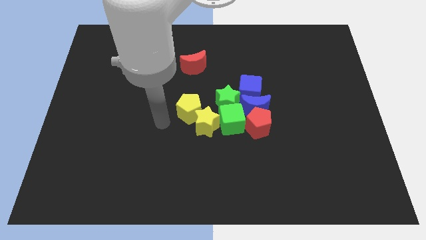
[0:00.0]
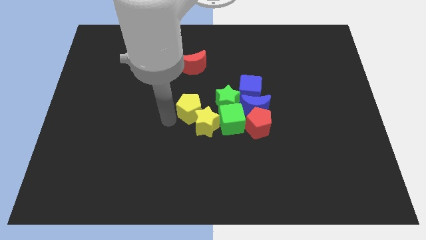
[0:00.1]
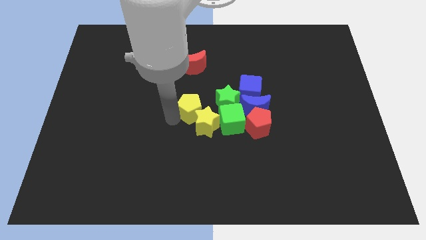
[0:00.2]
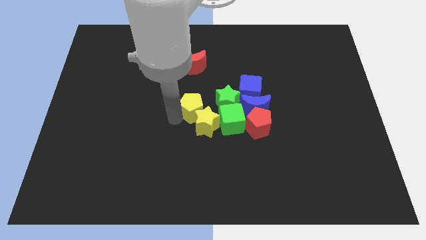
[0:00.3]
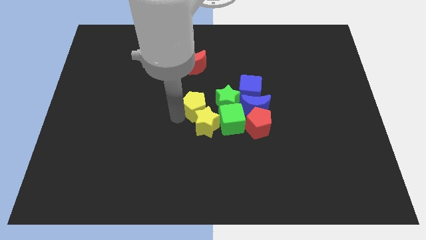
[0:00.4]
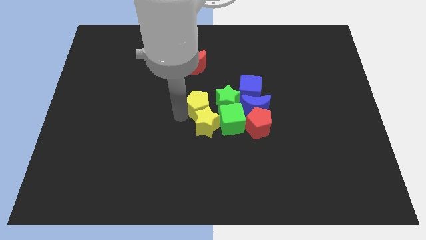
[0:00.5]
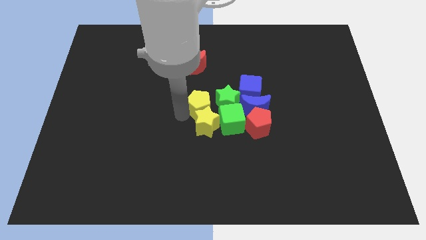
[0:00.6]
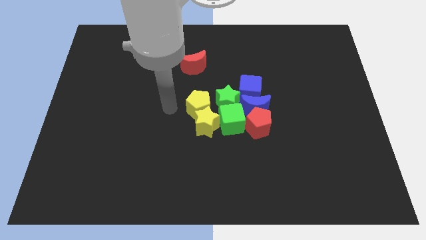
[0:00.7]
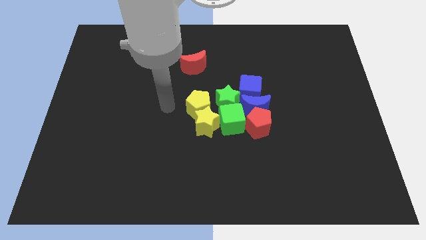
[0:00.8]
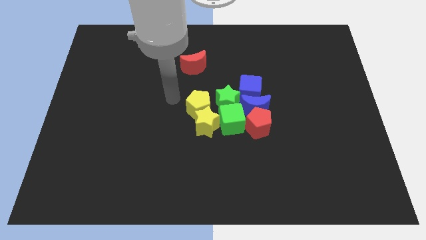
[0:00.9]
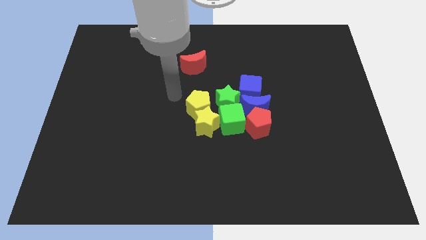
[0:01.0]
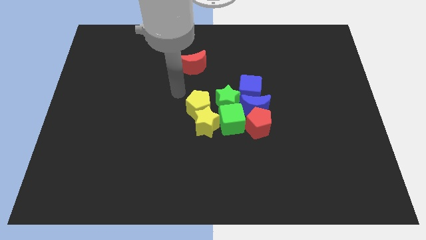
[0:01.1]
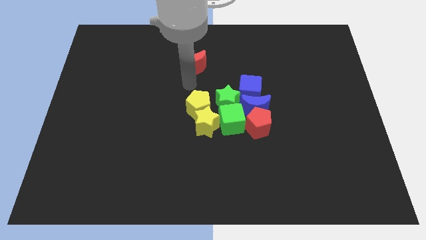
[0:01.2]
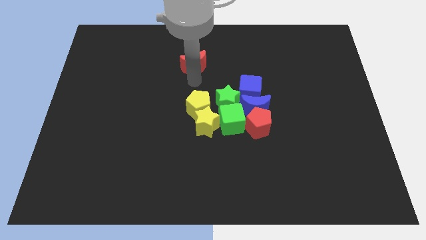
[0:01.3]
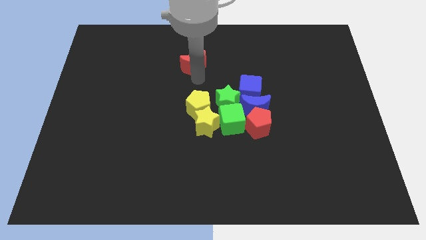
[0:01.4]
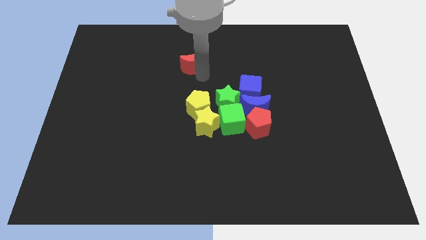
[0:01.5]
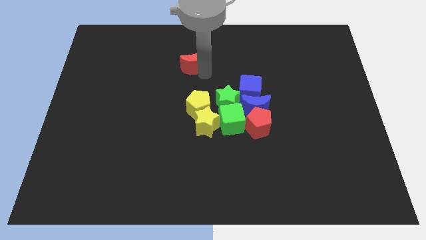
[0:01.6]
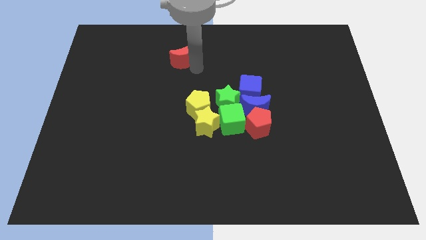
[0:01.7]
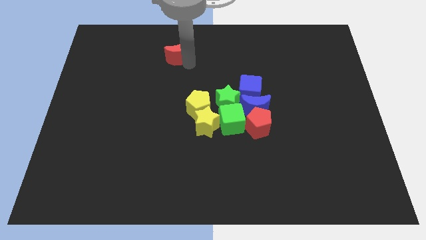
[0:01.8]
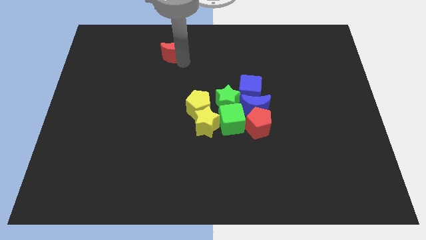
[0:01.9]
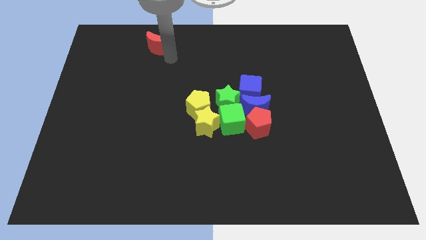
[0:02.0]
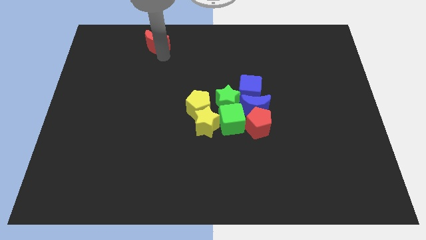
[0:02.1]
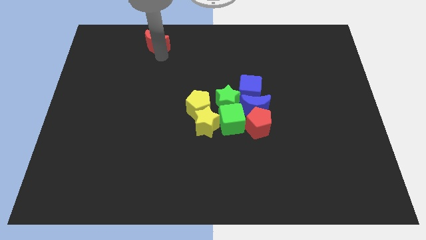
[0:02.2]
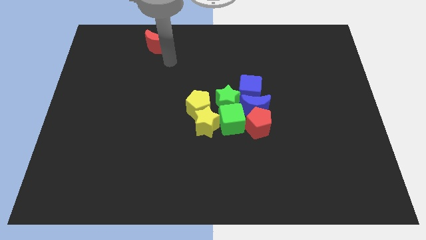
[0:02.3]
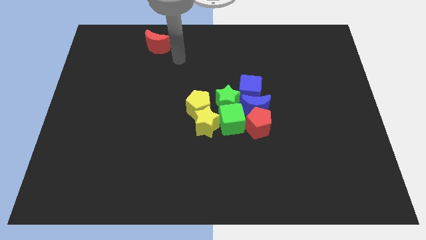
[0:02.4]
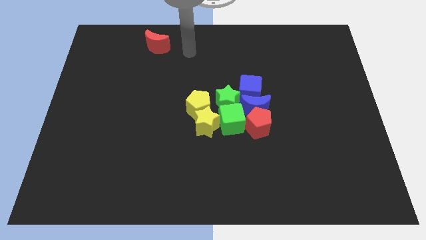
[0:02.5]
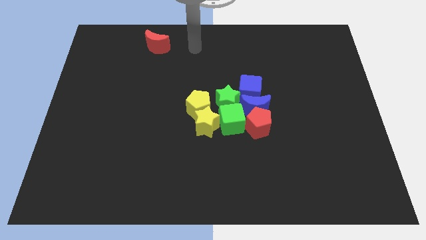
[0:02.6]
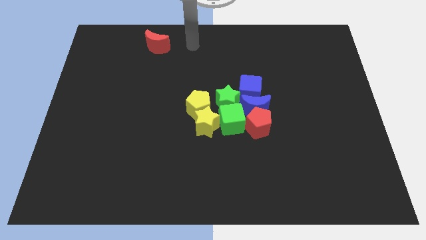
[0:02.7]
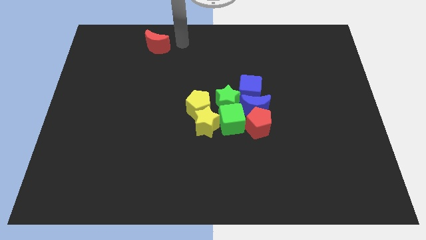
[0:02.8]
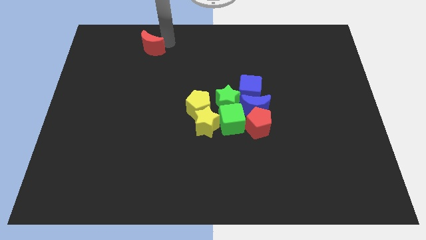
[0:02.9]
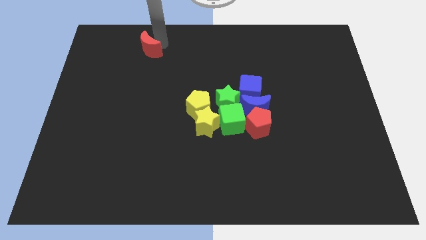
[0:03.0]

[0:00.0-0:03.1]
move the red moon to the top of the board

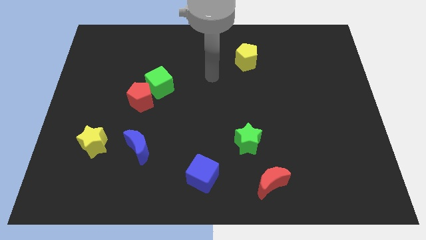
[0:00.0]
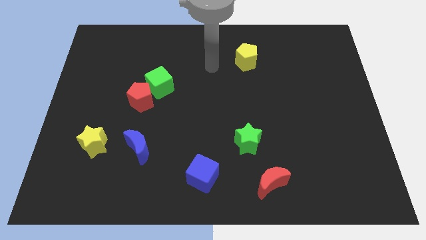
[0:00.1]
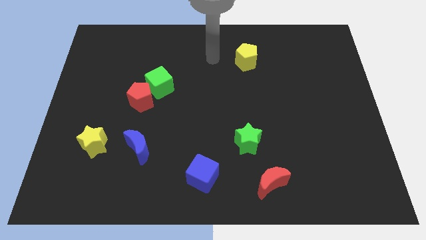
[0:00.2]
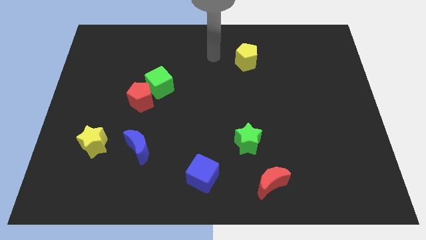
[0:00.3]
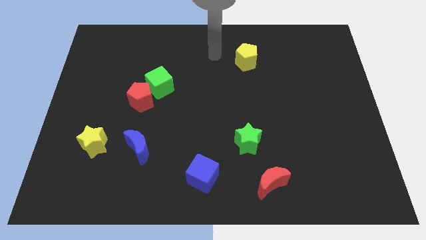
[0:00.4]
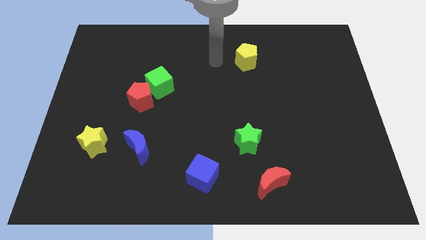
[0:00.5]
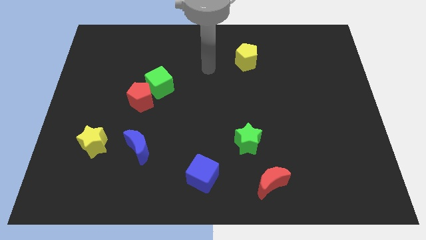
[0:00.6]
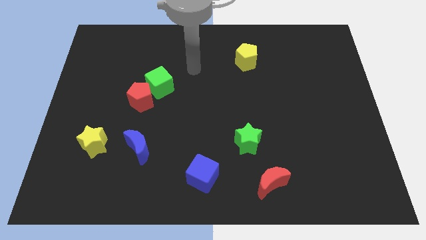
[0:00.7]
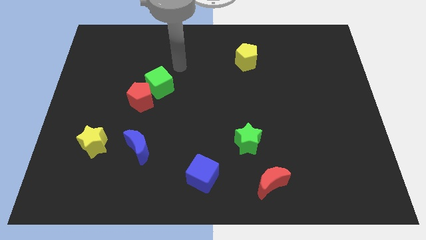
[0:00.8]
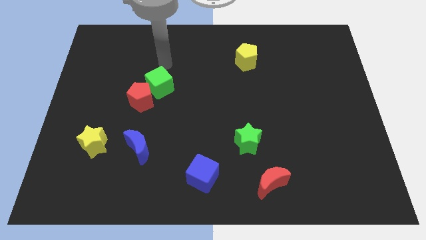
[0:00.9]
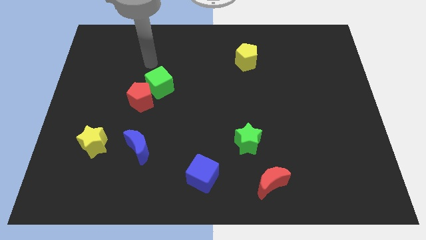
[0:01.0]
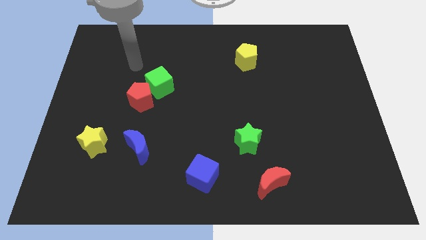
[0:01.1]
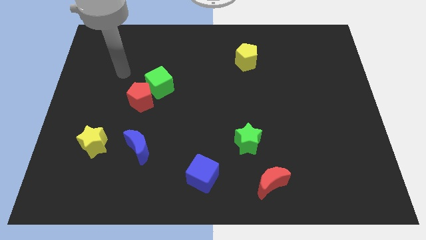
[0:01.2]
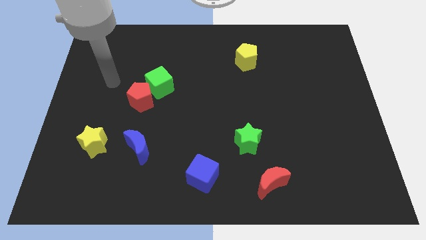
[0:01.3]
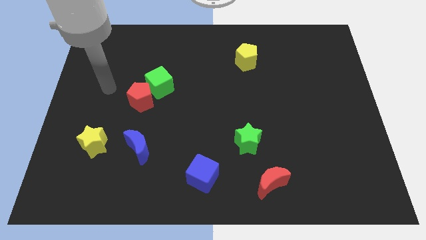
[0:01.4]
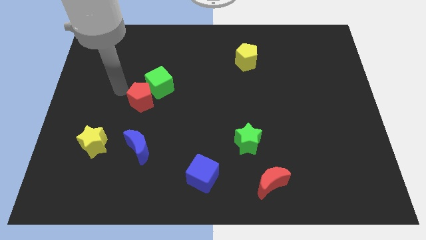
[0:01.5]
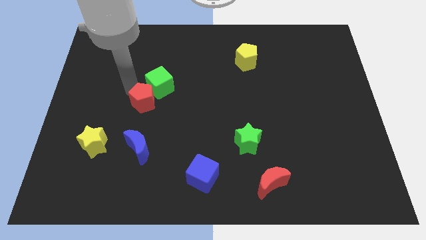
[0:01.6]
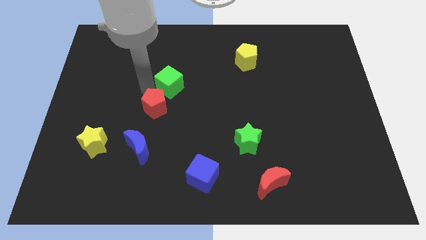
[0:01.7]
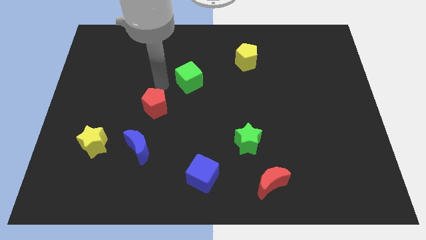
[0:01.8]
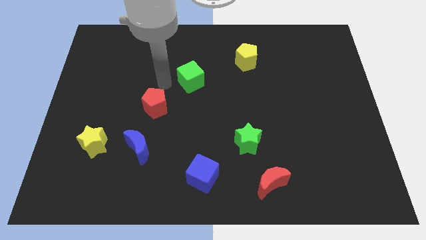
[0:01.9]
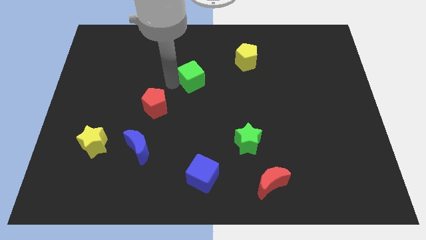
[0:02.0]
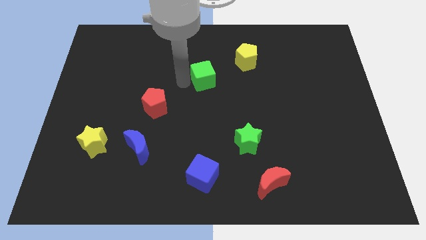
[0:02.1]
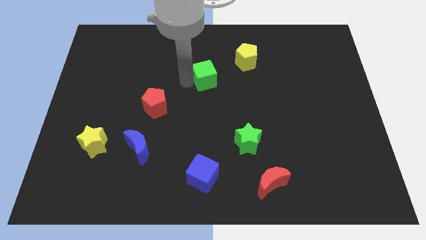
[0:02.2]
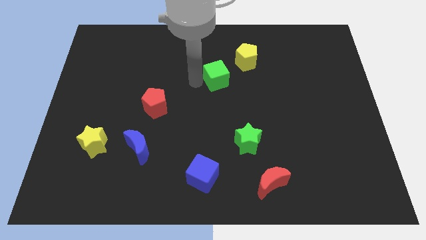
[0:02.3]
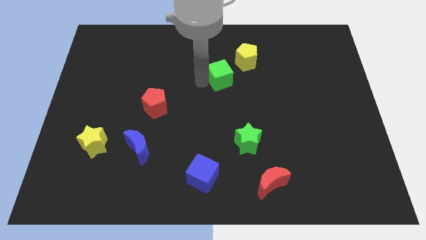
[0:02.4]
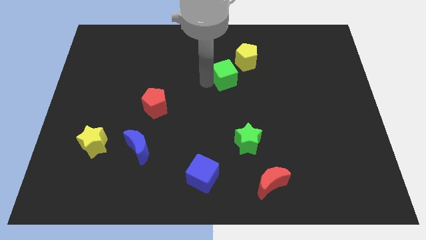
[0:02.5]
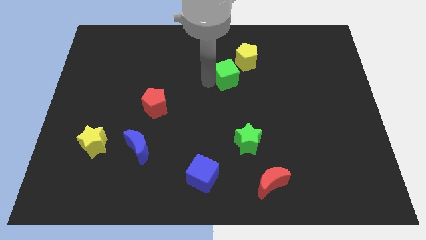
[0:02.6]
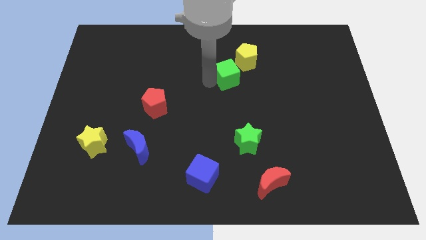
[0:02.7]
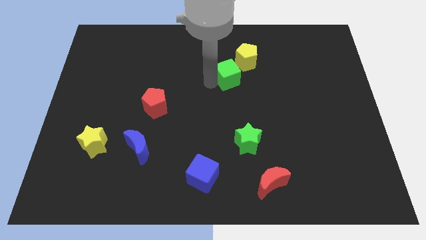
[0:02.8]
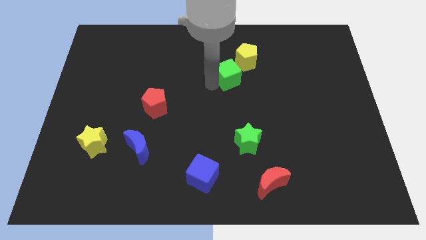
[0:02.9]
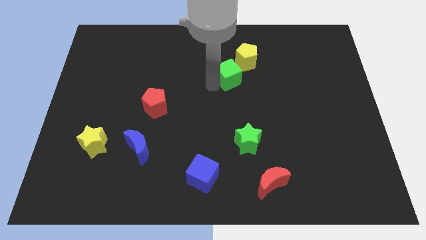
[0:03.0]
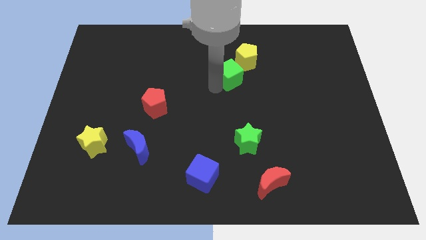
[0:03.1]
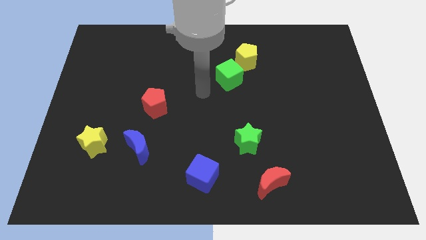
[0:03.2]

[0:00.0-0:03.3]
place the green cube above the green star

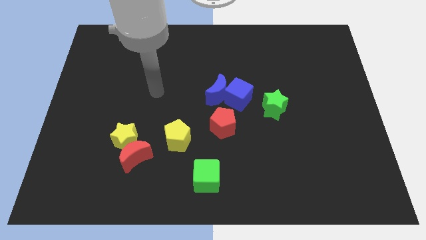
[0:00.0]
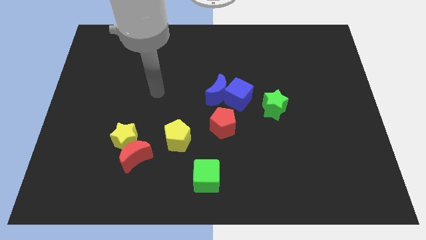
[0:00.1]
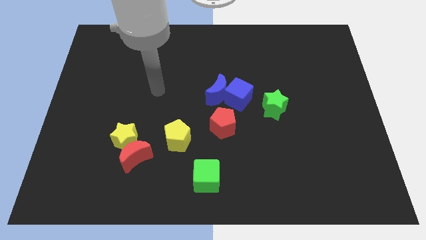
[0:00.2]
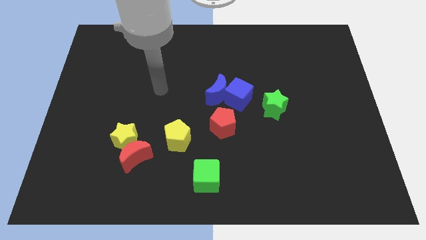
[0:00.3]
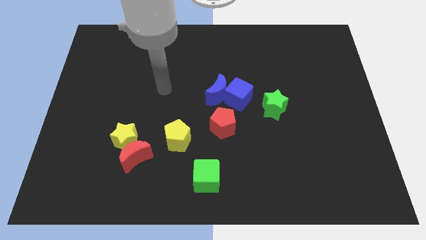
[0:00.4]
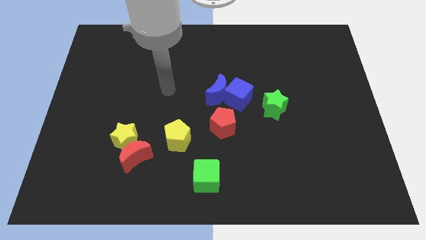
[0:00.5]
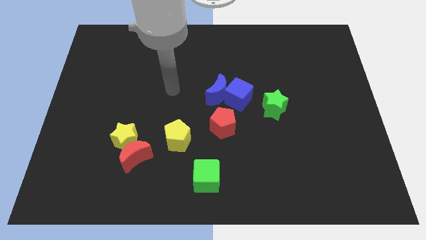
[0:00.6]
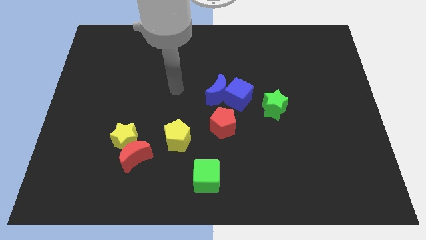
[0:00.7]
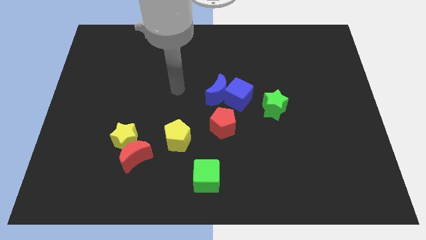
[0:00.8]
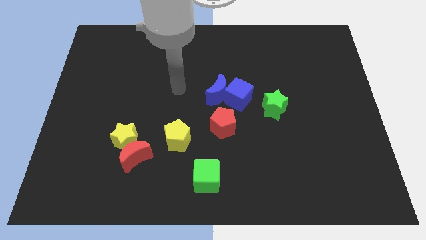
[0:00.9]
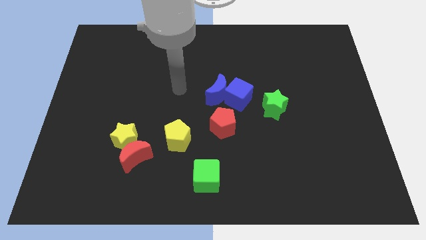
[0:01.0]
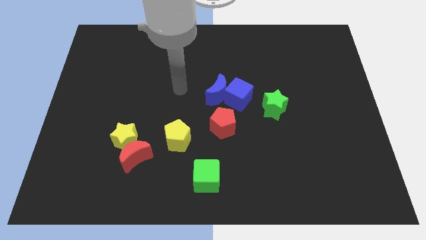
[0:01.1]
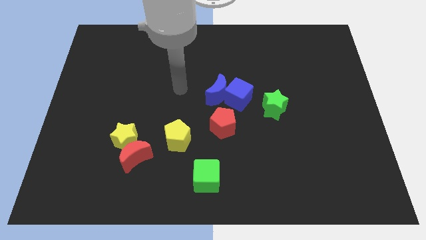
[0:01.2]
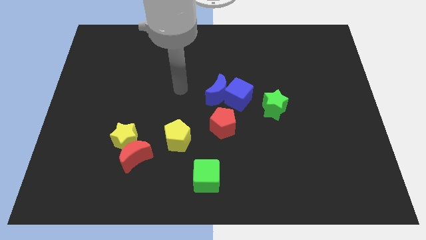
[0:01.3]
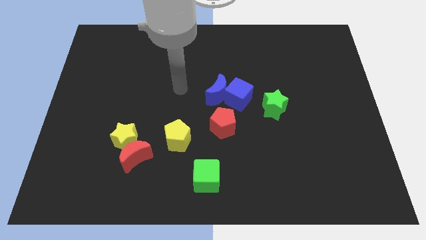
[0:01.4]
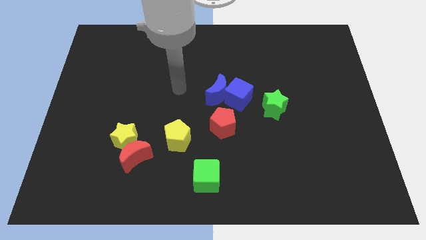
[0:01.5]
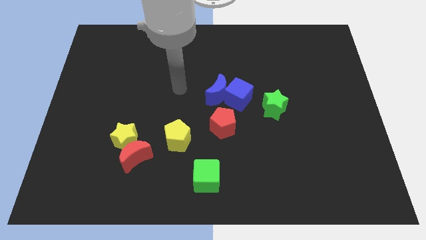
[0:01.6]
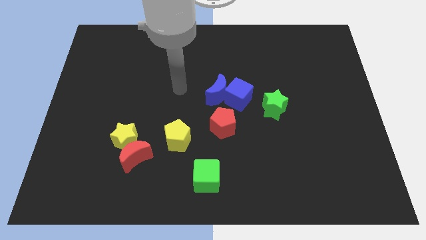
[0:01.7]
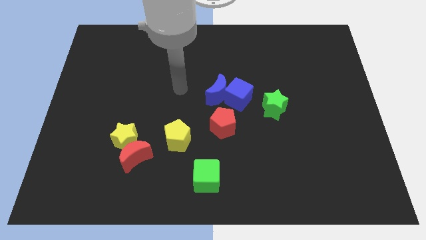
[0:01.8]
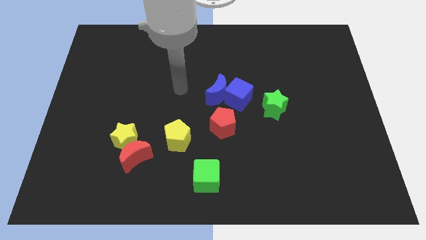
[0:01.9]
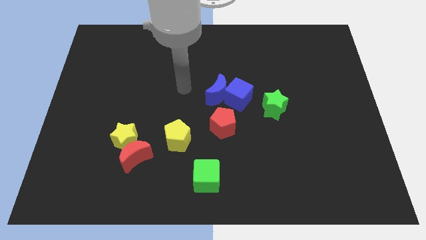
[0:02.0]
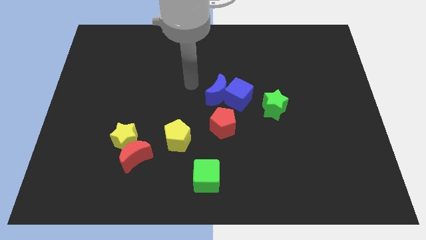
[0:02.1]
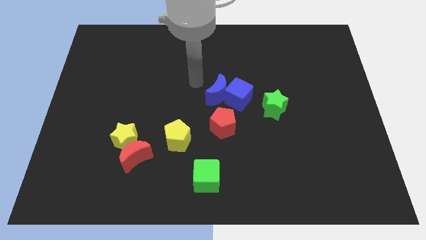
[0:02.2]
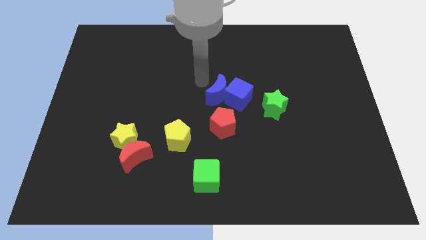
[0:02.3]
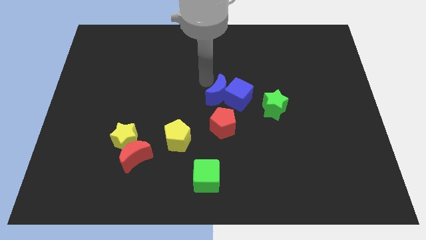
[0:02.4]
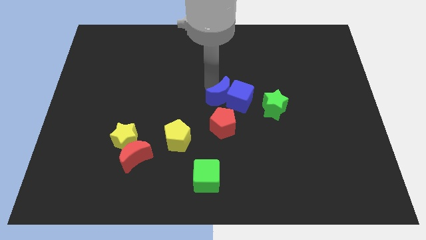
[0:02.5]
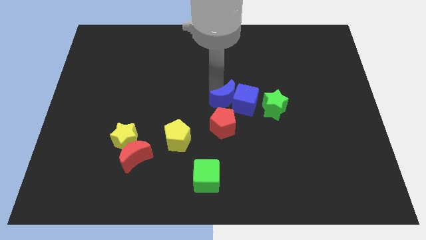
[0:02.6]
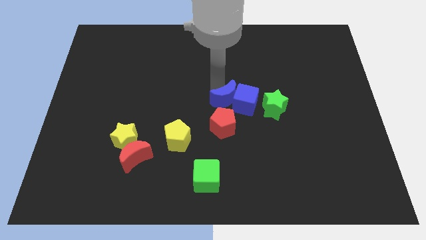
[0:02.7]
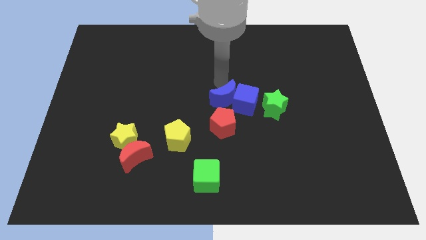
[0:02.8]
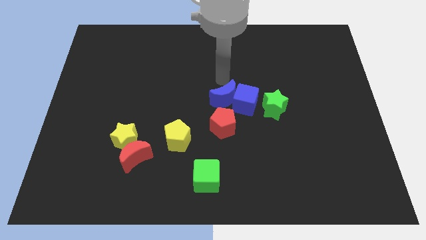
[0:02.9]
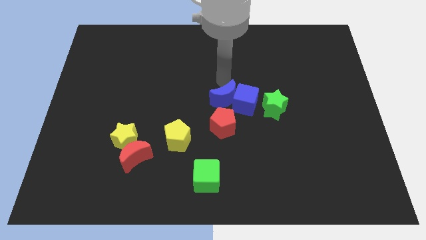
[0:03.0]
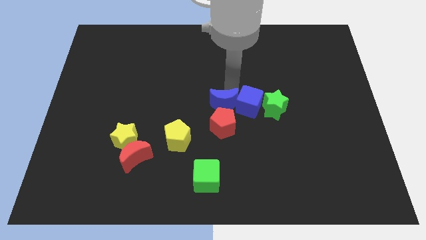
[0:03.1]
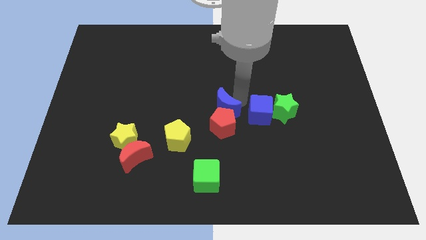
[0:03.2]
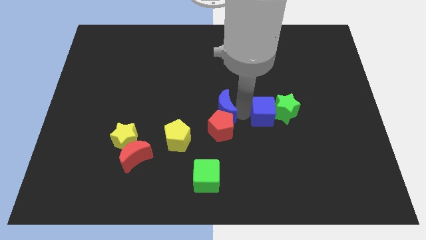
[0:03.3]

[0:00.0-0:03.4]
place blue moon close to the red pentagon
